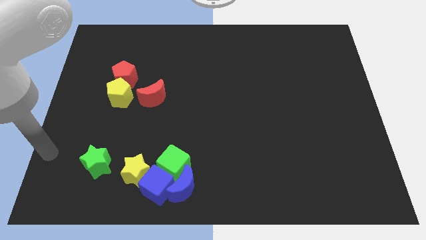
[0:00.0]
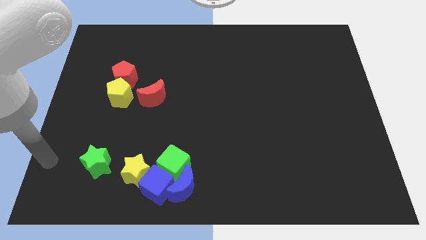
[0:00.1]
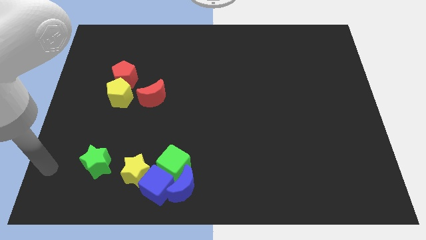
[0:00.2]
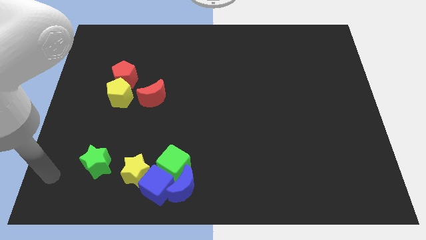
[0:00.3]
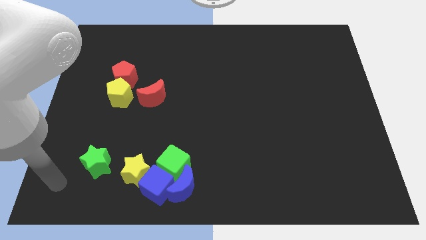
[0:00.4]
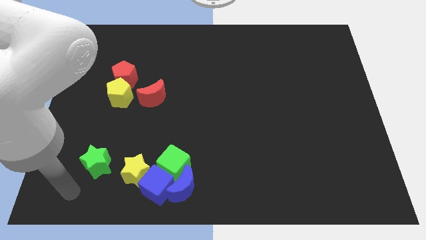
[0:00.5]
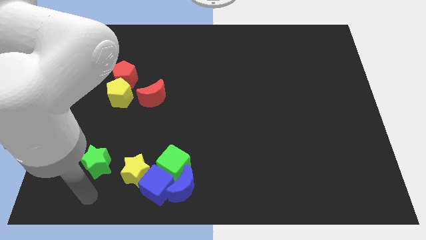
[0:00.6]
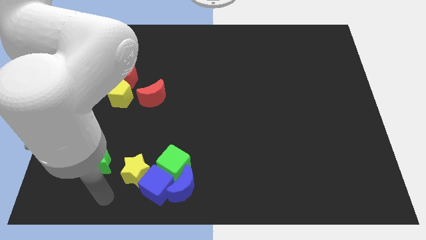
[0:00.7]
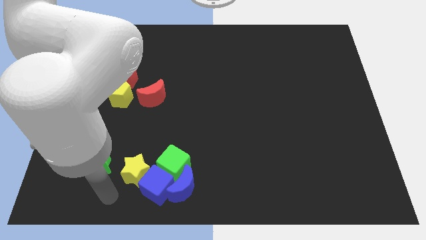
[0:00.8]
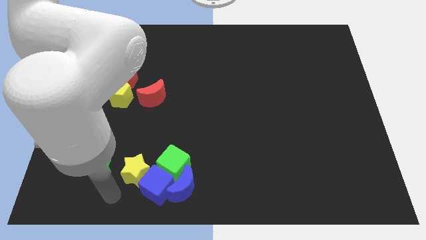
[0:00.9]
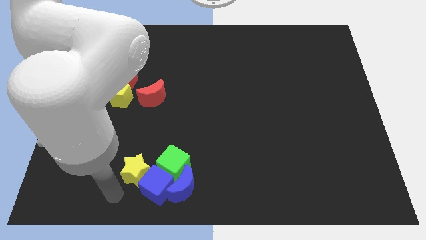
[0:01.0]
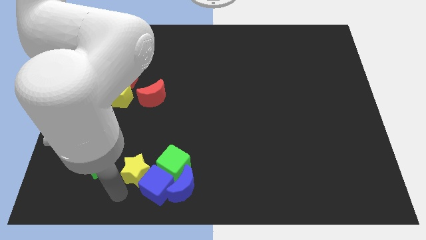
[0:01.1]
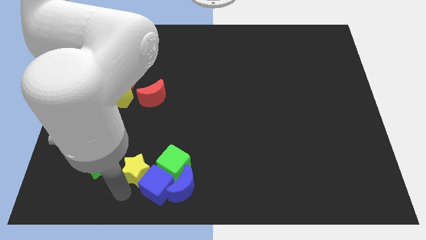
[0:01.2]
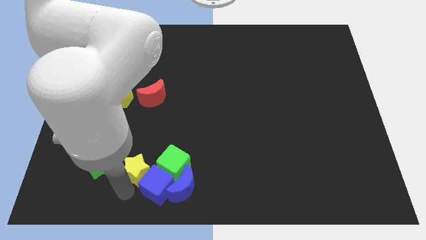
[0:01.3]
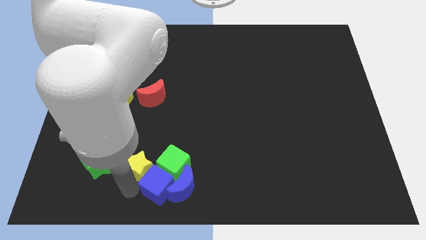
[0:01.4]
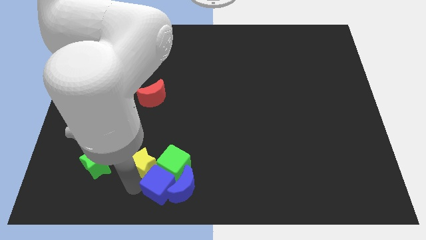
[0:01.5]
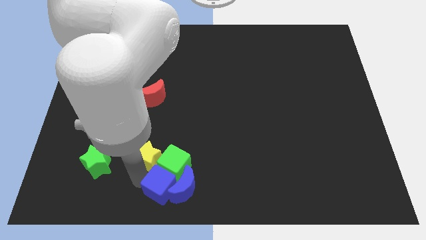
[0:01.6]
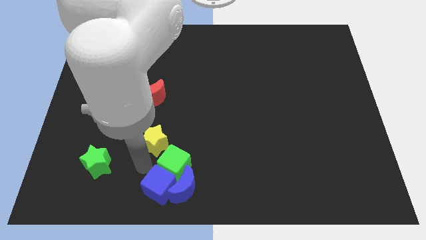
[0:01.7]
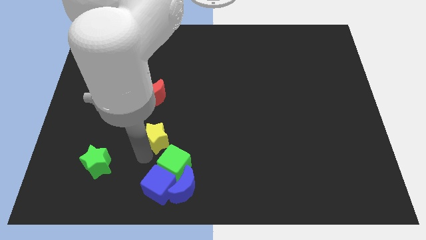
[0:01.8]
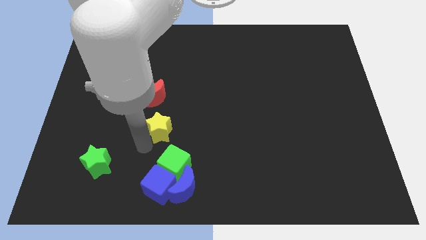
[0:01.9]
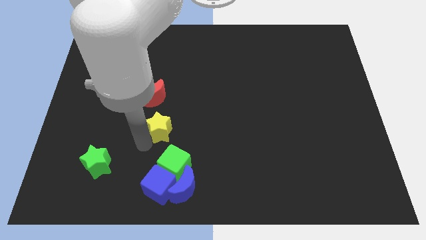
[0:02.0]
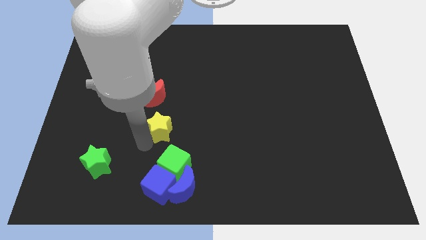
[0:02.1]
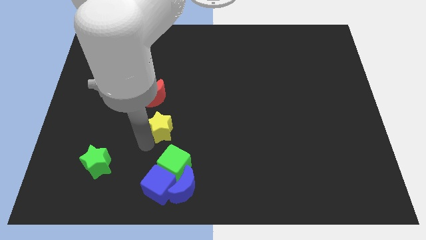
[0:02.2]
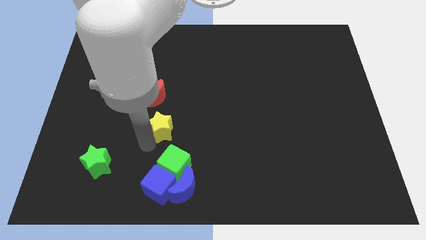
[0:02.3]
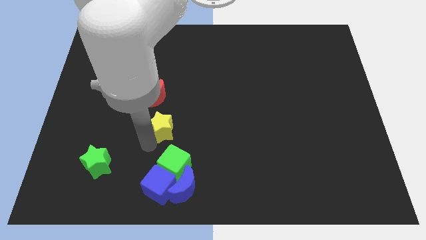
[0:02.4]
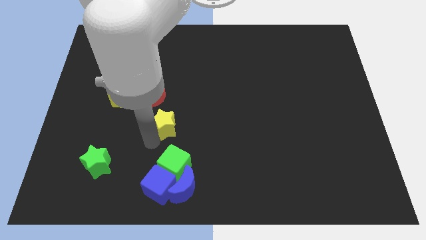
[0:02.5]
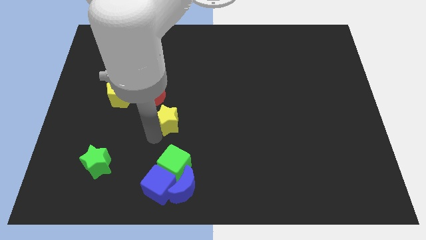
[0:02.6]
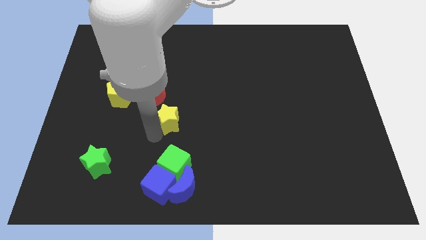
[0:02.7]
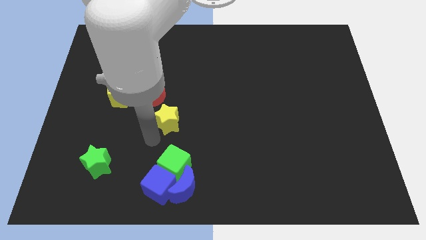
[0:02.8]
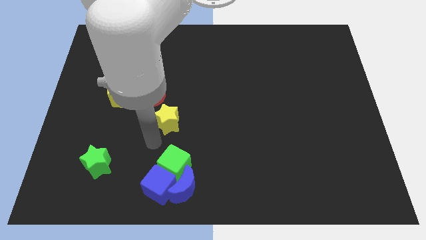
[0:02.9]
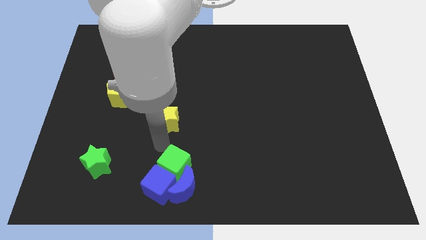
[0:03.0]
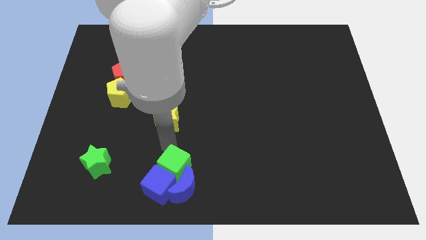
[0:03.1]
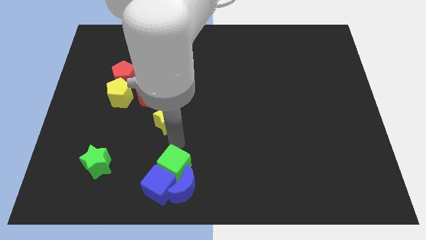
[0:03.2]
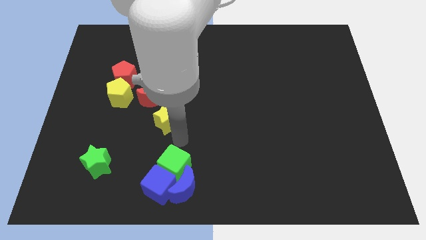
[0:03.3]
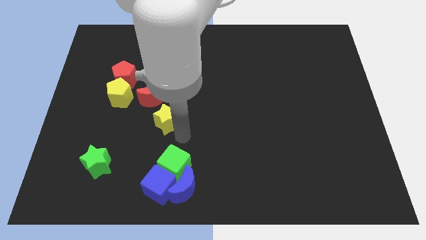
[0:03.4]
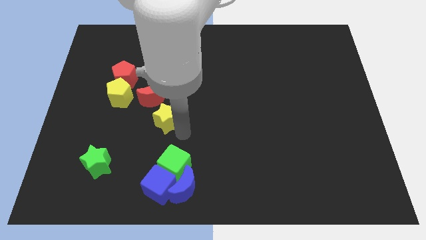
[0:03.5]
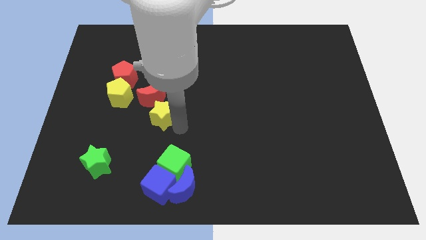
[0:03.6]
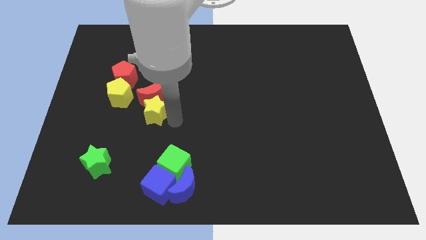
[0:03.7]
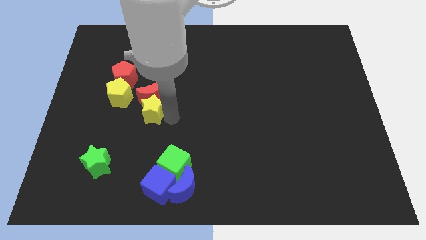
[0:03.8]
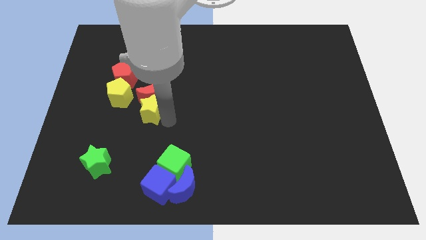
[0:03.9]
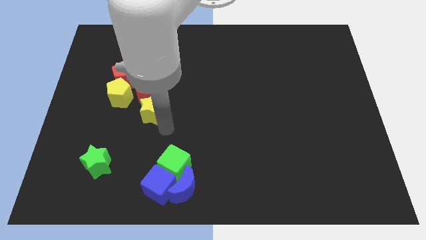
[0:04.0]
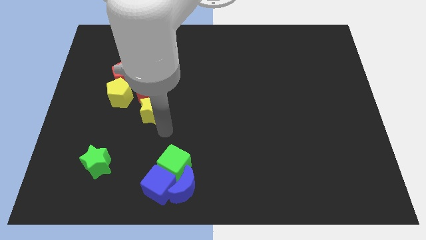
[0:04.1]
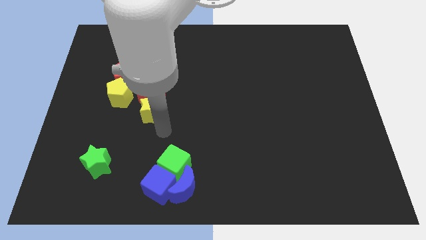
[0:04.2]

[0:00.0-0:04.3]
push the yellow star to the bottom side of the red moon

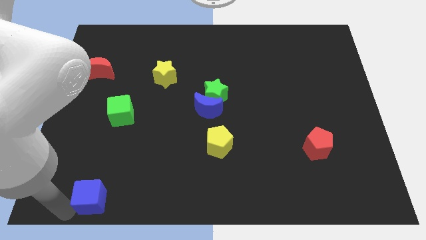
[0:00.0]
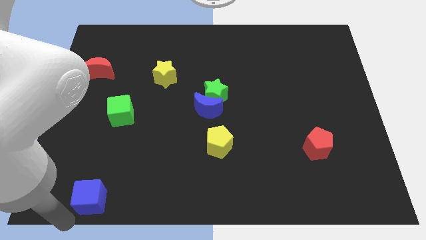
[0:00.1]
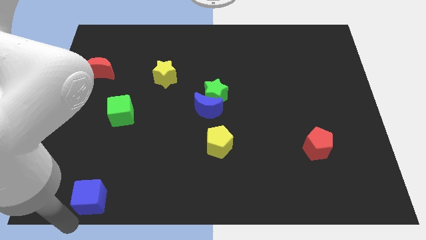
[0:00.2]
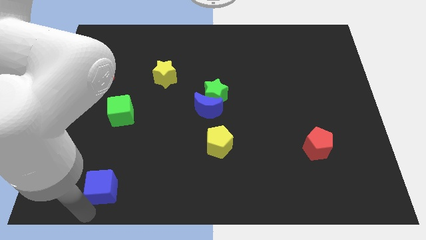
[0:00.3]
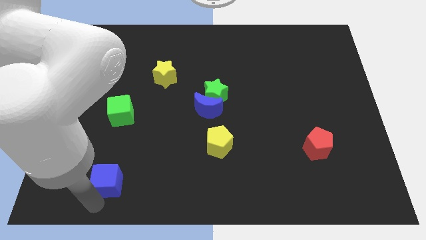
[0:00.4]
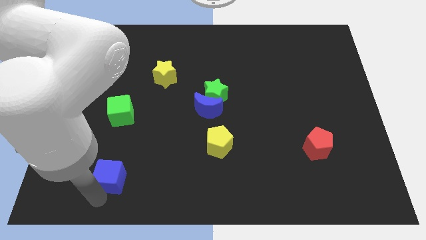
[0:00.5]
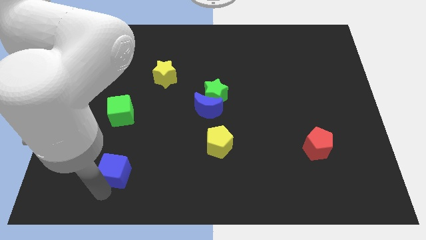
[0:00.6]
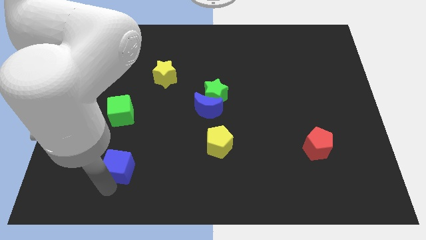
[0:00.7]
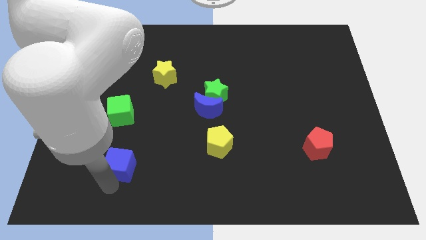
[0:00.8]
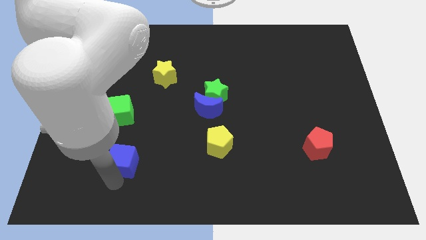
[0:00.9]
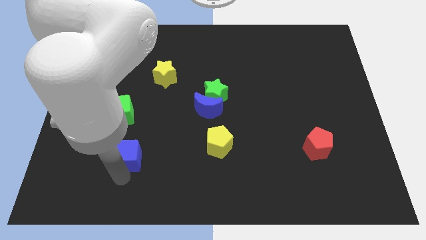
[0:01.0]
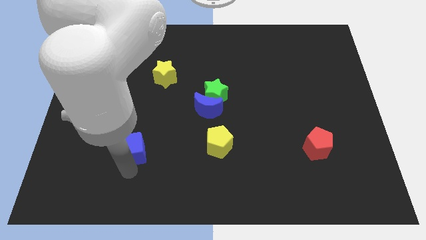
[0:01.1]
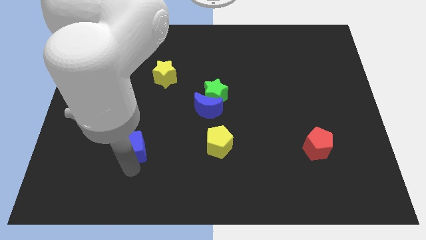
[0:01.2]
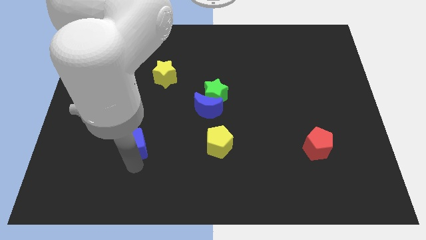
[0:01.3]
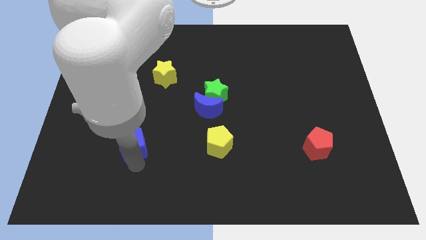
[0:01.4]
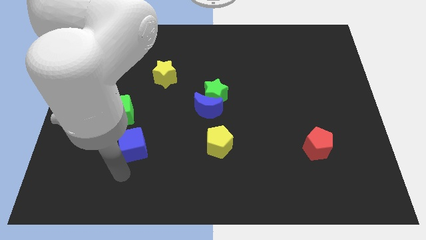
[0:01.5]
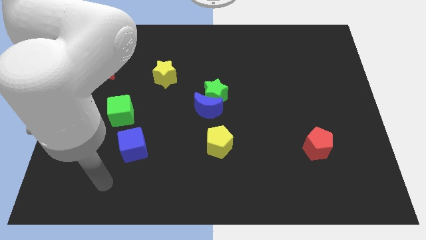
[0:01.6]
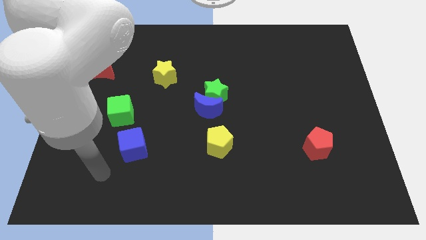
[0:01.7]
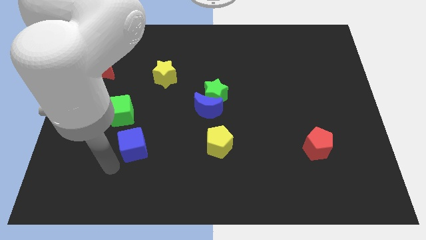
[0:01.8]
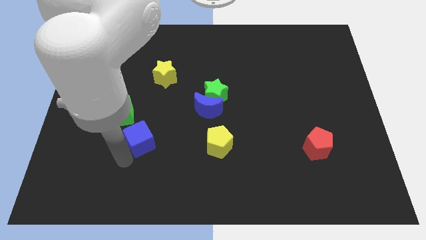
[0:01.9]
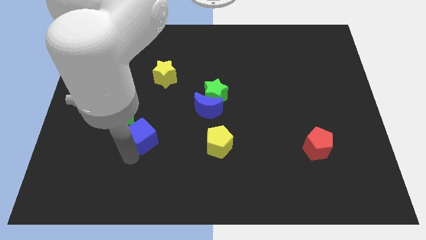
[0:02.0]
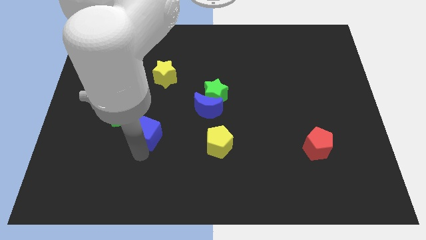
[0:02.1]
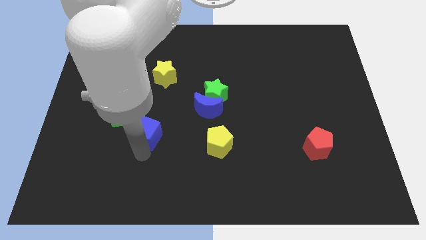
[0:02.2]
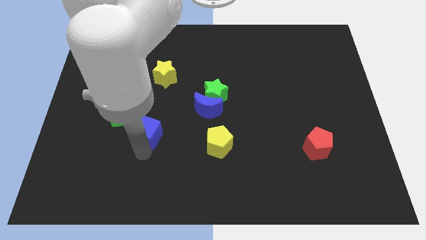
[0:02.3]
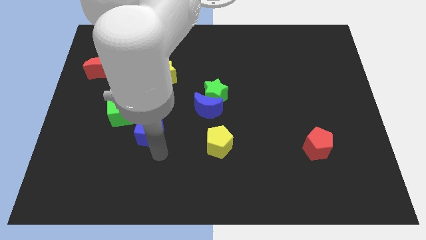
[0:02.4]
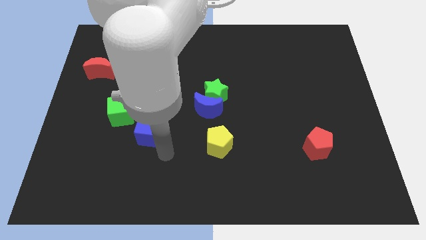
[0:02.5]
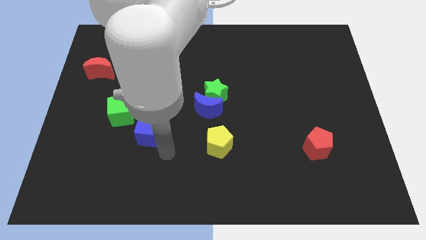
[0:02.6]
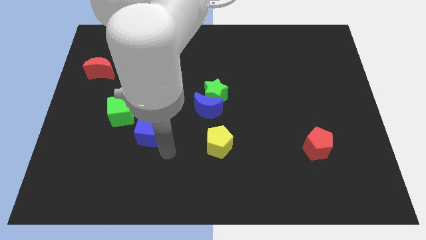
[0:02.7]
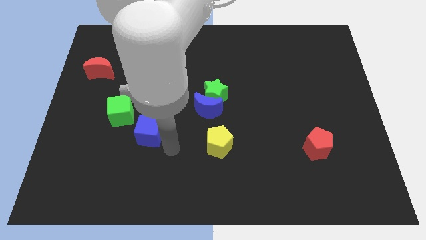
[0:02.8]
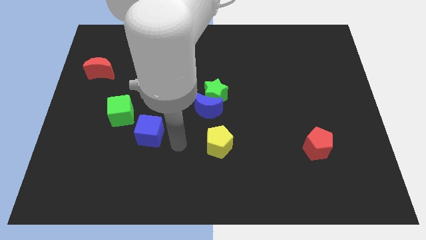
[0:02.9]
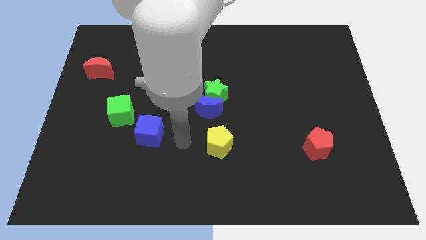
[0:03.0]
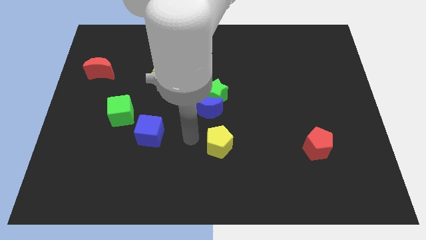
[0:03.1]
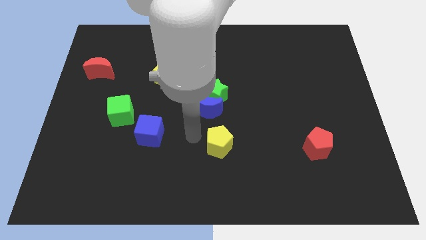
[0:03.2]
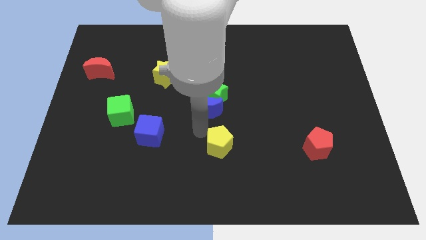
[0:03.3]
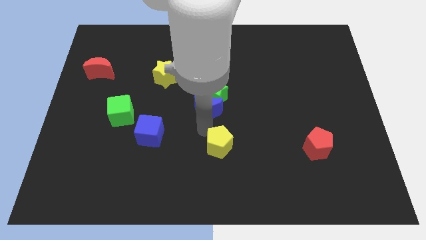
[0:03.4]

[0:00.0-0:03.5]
put the blue cube to the bottom right side of the green cube

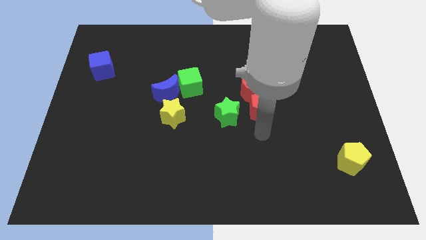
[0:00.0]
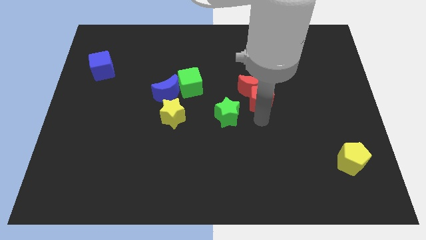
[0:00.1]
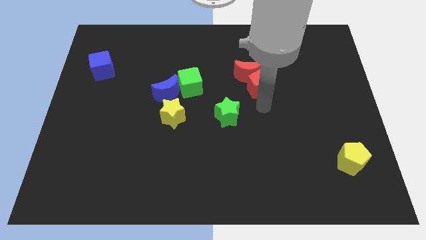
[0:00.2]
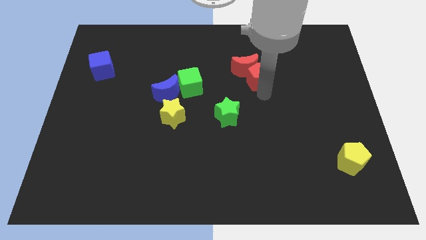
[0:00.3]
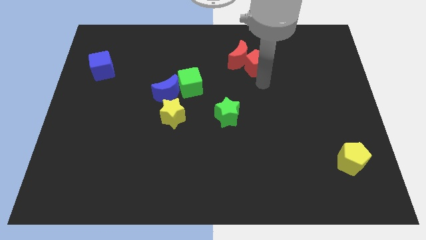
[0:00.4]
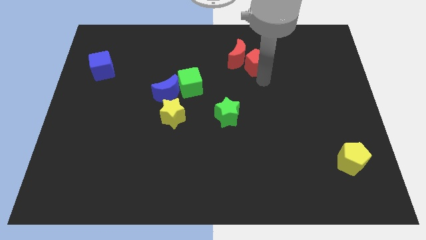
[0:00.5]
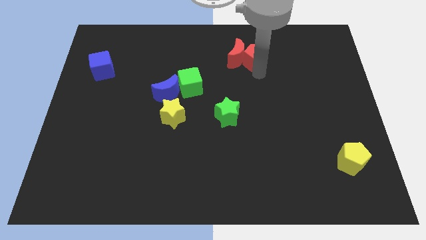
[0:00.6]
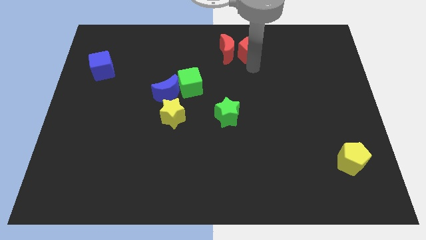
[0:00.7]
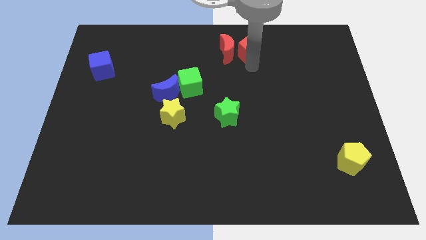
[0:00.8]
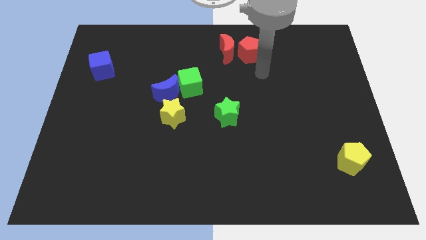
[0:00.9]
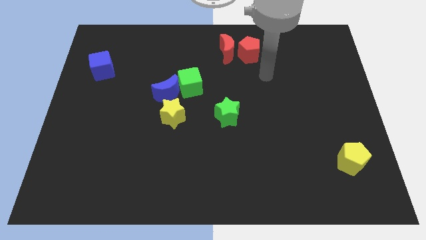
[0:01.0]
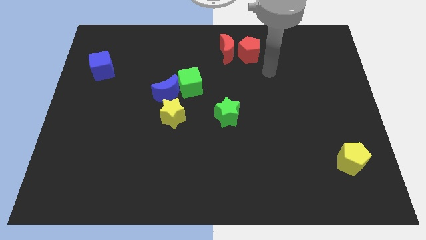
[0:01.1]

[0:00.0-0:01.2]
move red blocks towards center top

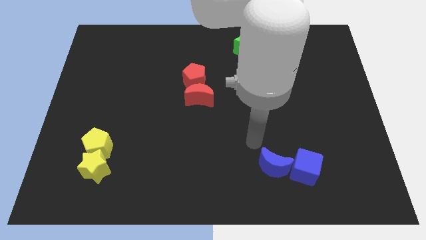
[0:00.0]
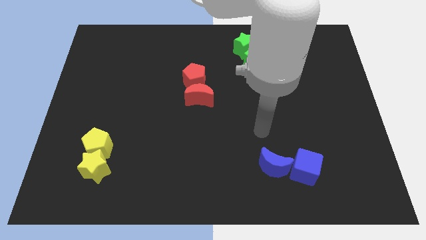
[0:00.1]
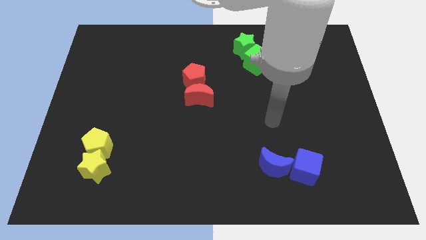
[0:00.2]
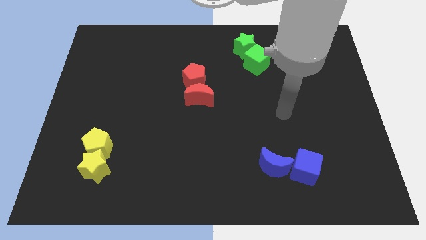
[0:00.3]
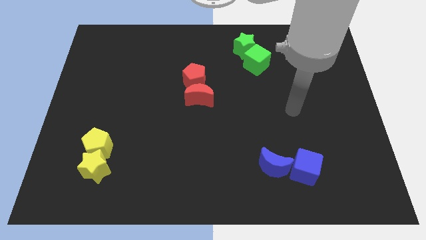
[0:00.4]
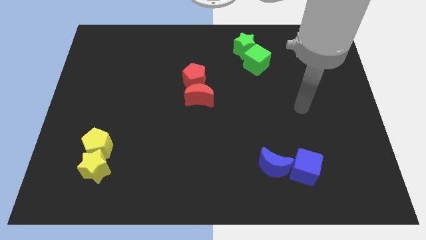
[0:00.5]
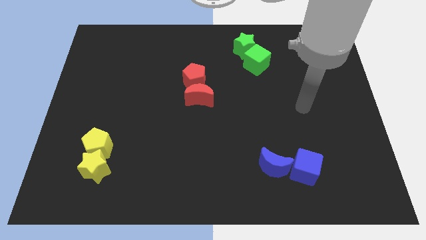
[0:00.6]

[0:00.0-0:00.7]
put your arm away from blue moon
